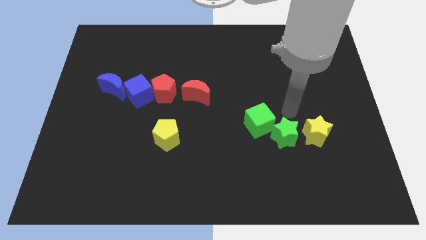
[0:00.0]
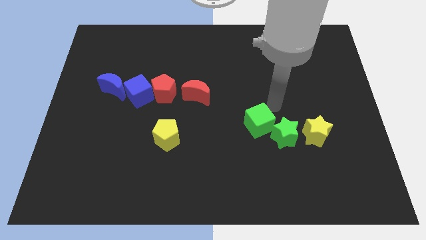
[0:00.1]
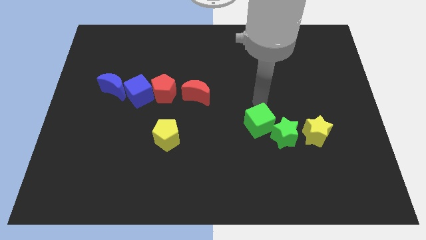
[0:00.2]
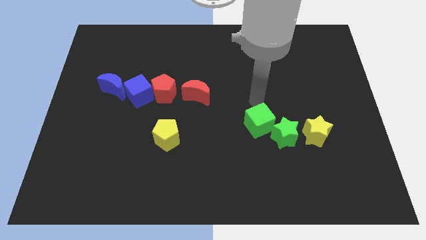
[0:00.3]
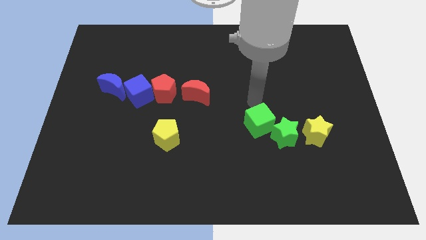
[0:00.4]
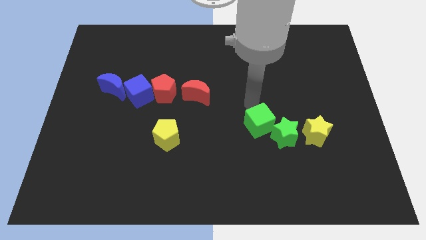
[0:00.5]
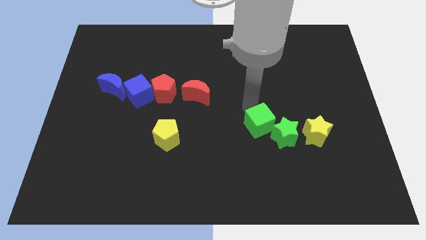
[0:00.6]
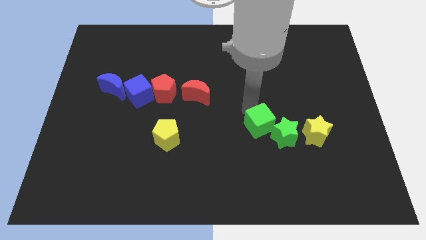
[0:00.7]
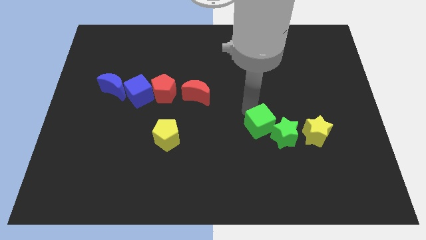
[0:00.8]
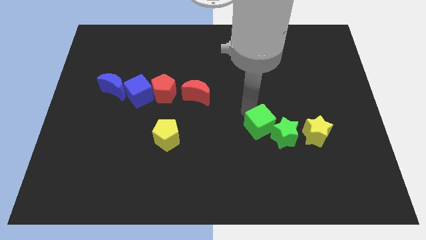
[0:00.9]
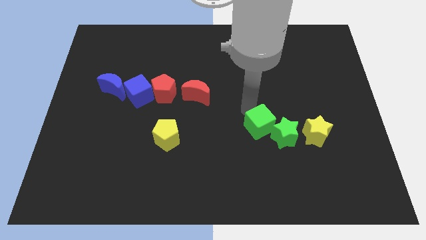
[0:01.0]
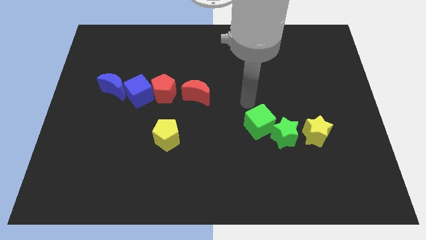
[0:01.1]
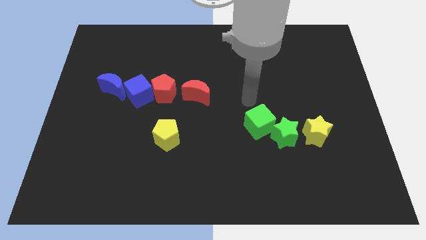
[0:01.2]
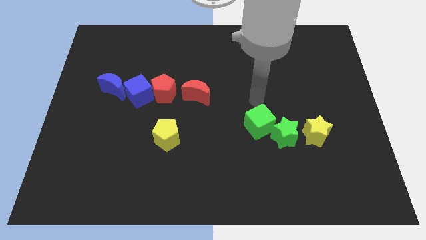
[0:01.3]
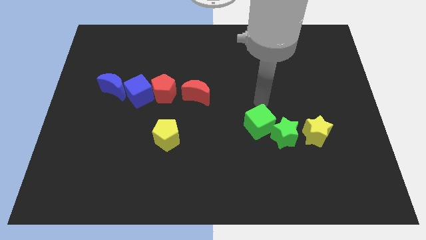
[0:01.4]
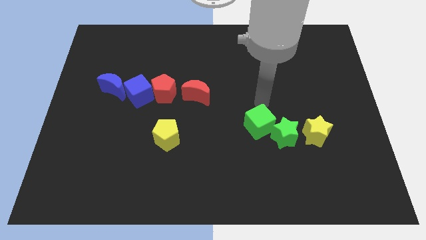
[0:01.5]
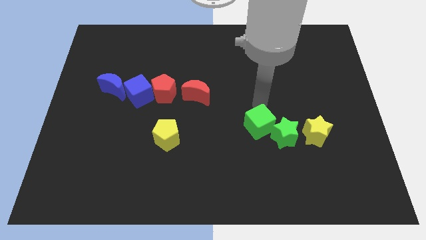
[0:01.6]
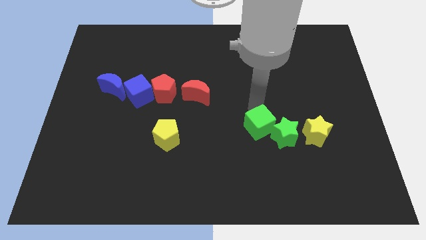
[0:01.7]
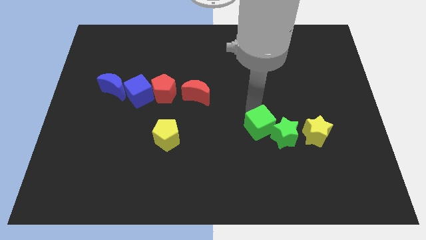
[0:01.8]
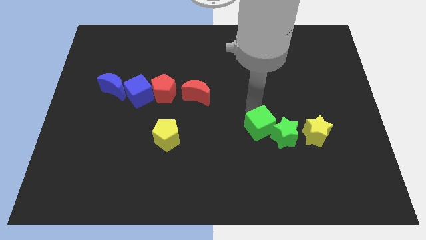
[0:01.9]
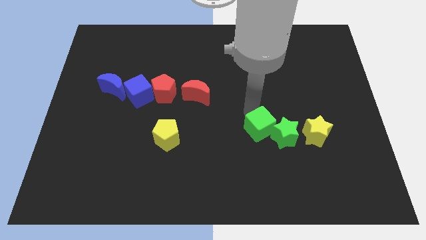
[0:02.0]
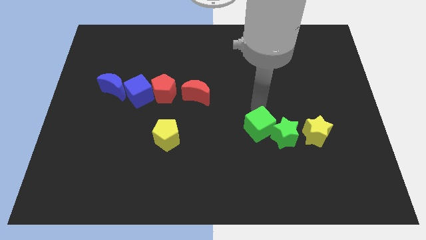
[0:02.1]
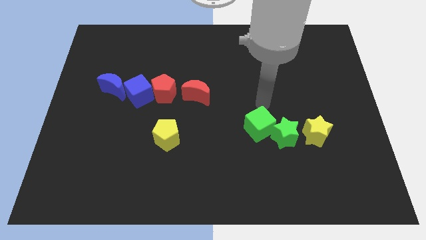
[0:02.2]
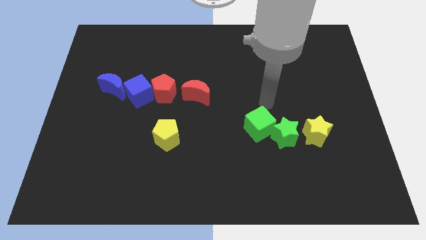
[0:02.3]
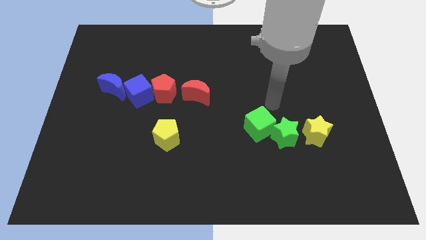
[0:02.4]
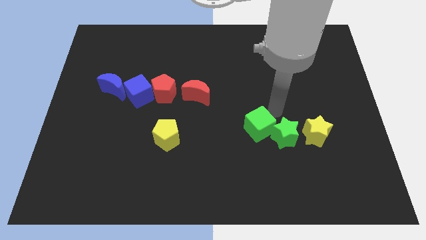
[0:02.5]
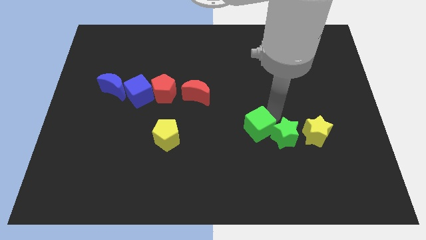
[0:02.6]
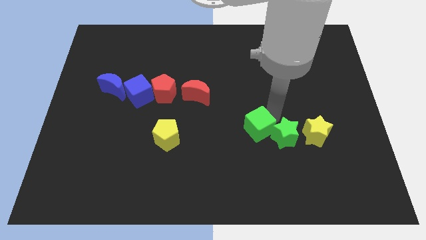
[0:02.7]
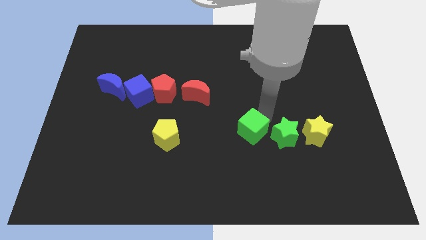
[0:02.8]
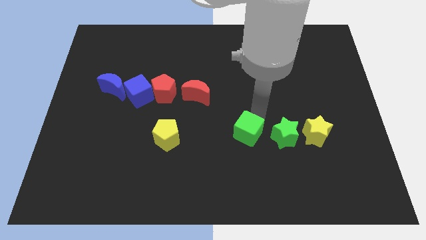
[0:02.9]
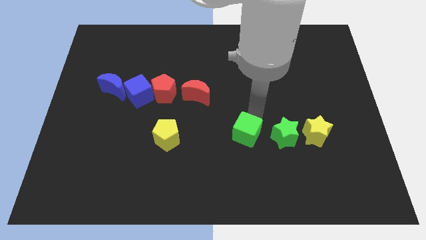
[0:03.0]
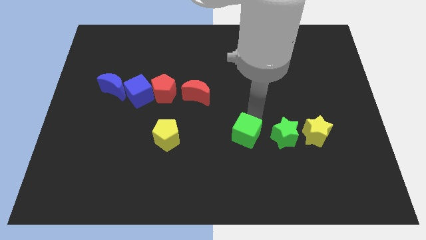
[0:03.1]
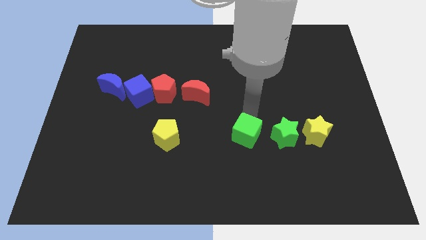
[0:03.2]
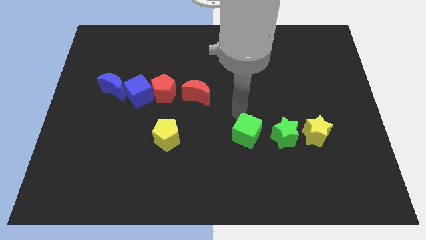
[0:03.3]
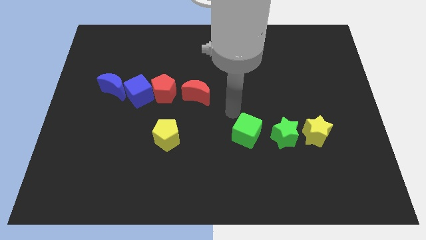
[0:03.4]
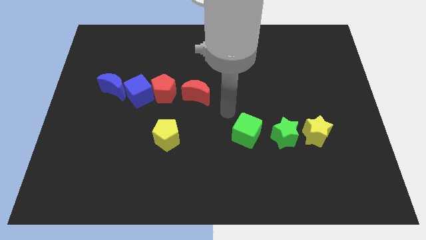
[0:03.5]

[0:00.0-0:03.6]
push the green cube slightly downwards

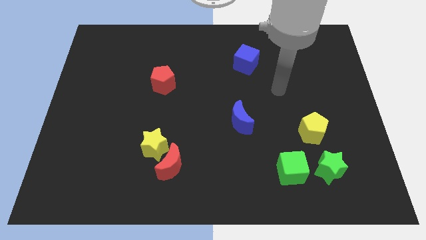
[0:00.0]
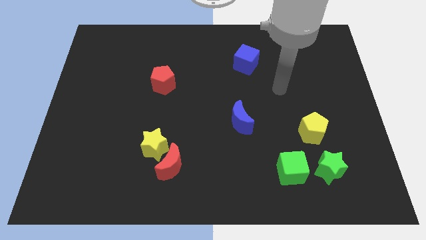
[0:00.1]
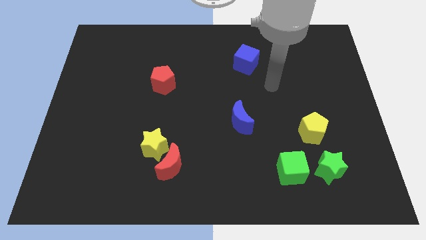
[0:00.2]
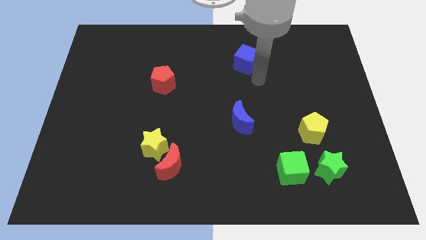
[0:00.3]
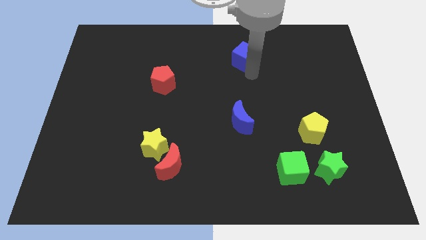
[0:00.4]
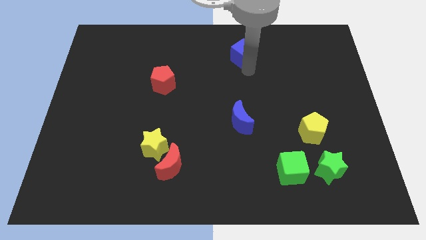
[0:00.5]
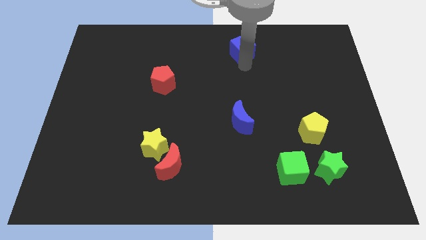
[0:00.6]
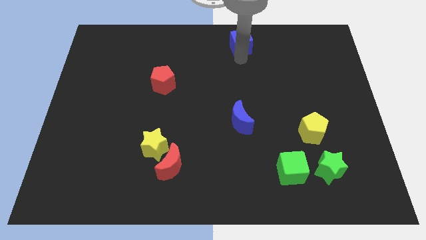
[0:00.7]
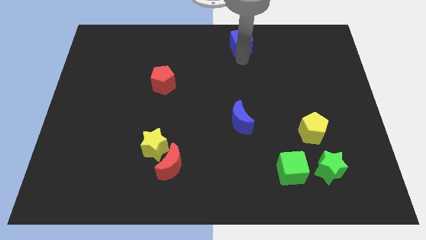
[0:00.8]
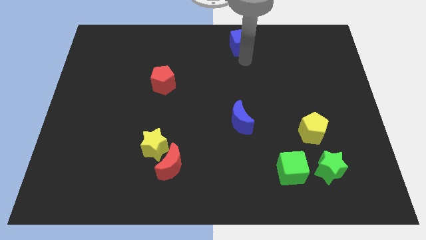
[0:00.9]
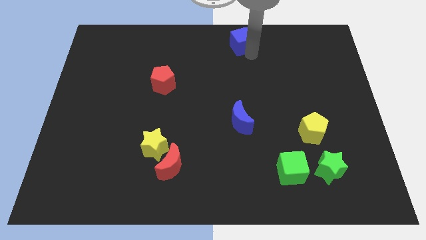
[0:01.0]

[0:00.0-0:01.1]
push the blue cube slightly to the top

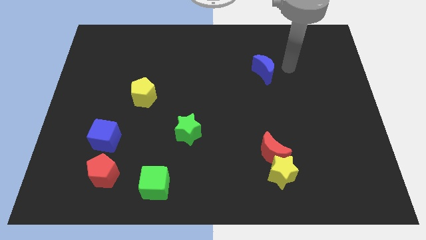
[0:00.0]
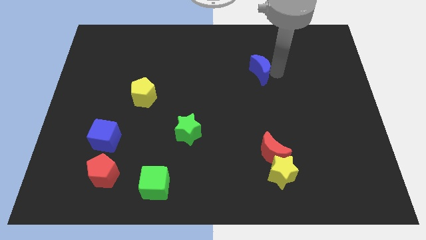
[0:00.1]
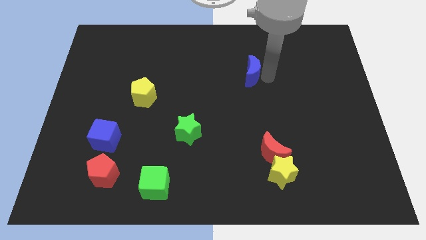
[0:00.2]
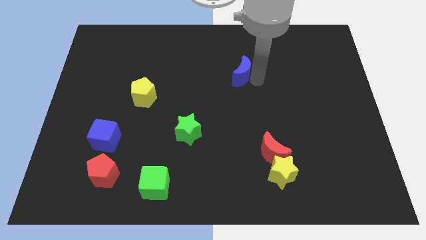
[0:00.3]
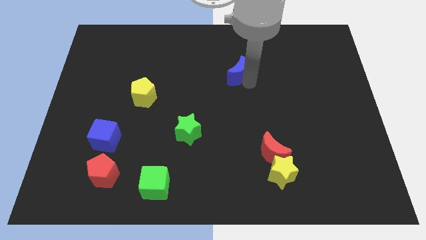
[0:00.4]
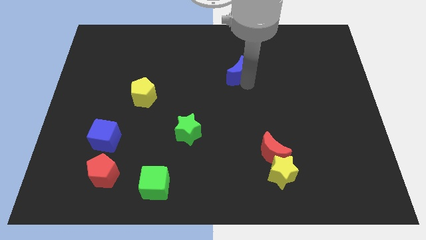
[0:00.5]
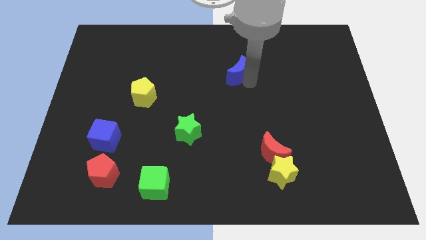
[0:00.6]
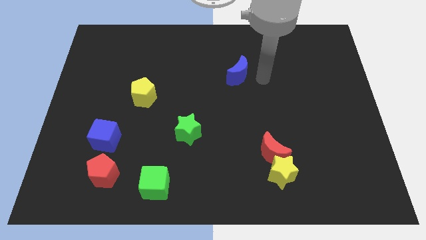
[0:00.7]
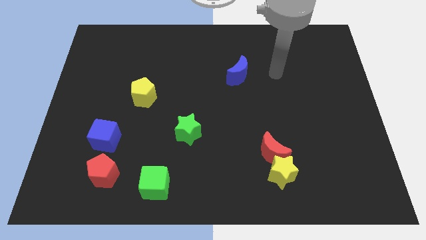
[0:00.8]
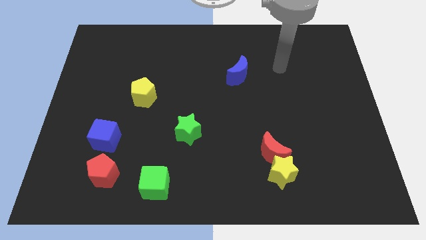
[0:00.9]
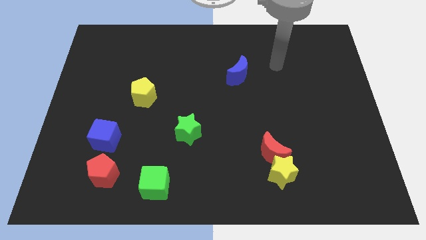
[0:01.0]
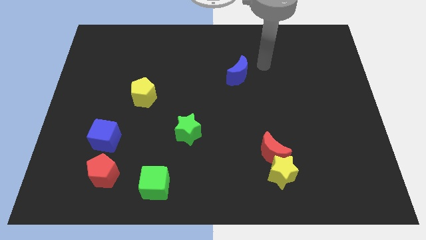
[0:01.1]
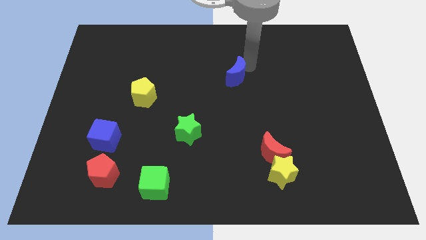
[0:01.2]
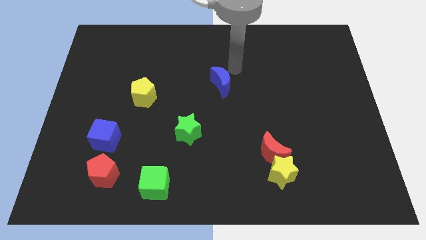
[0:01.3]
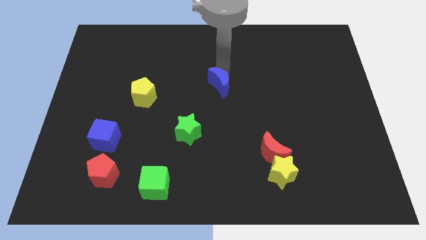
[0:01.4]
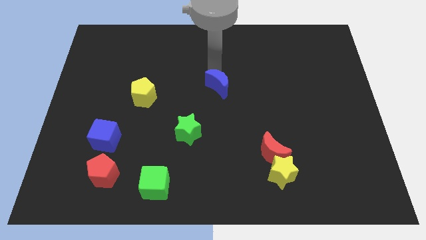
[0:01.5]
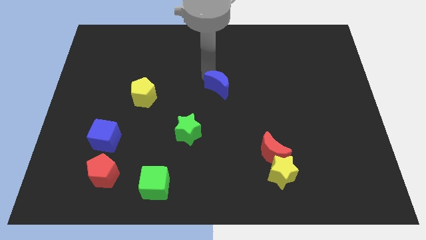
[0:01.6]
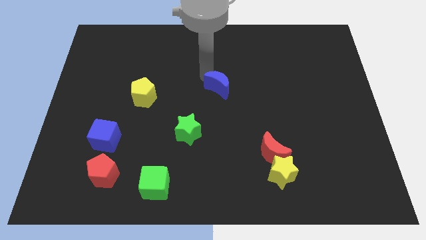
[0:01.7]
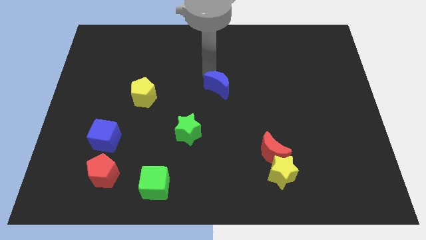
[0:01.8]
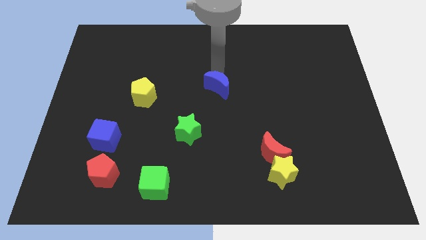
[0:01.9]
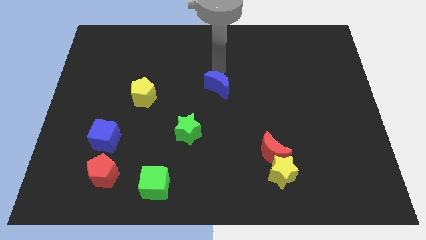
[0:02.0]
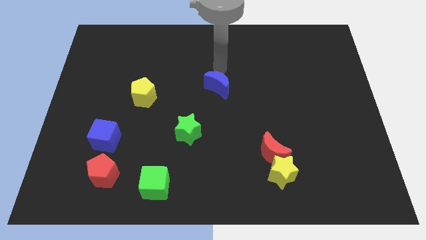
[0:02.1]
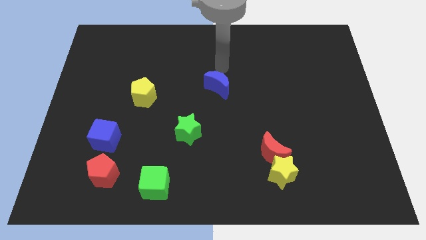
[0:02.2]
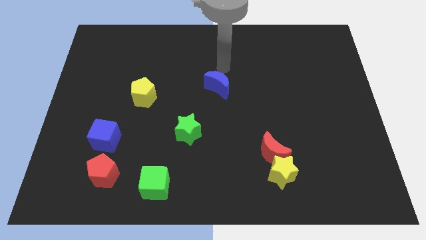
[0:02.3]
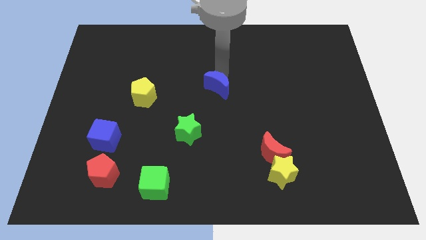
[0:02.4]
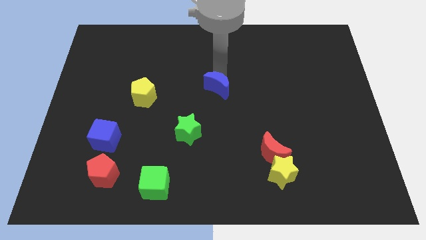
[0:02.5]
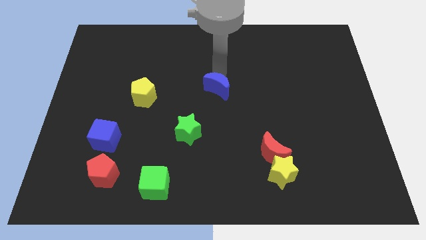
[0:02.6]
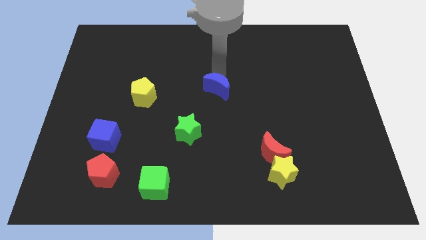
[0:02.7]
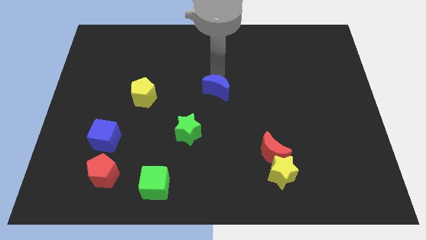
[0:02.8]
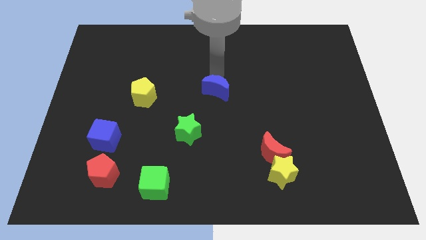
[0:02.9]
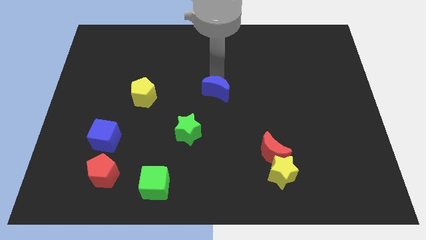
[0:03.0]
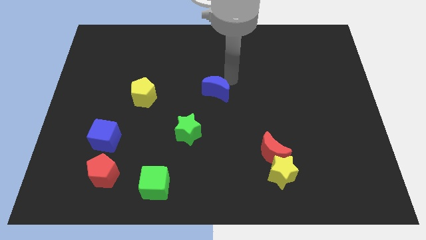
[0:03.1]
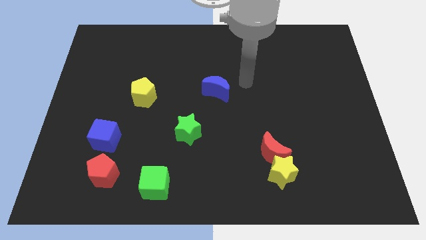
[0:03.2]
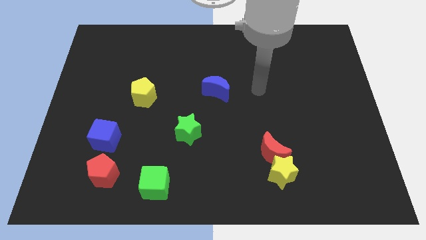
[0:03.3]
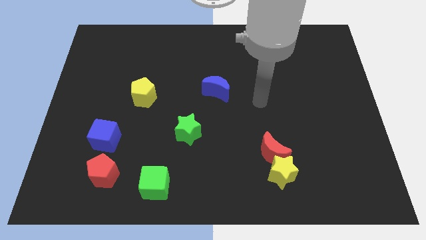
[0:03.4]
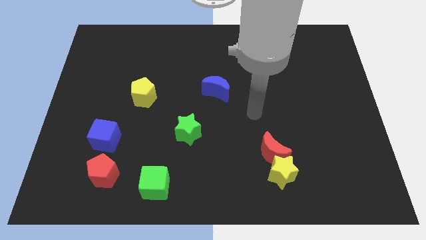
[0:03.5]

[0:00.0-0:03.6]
place the blue moon to the right of the yellow pentagon

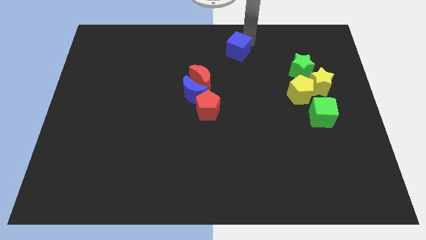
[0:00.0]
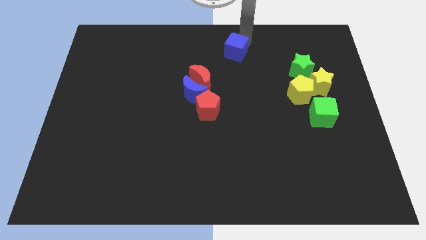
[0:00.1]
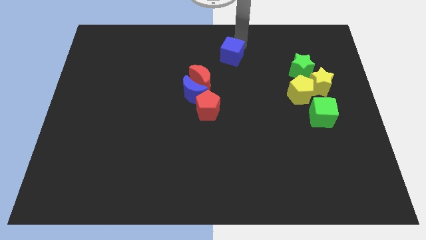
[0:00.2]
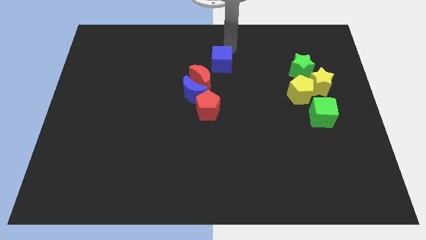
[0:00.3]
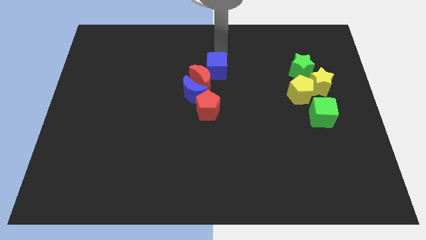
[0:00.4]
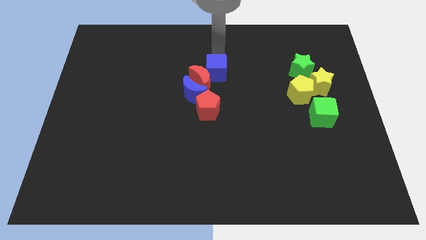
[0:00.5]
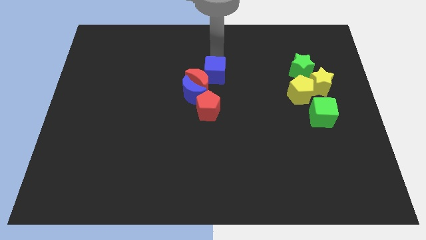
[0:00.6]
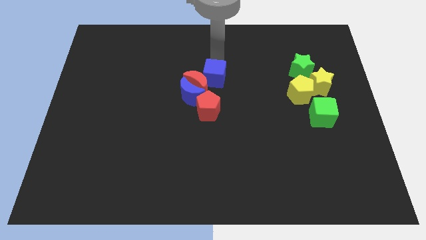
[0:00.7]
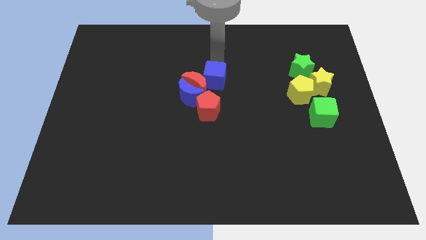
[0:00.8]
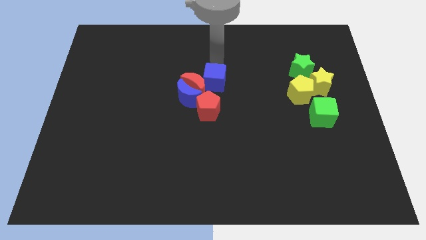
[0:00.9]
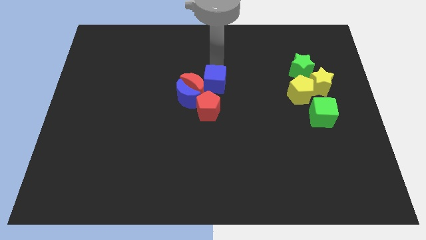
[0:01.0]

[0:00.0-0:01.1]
put the blue cube into the red moon
